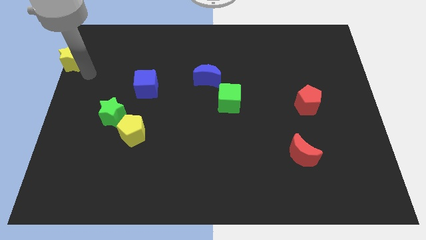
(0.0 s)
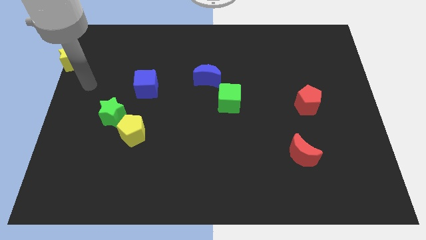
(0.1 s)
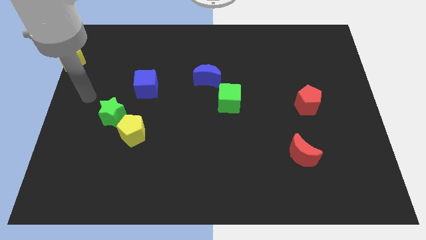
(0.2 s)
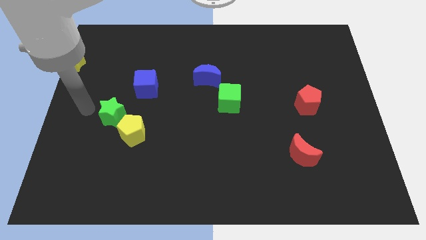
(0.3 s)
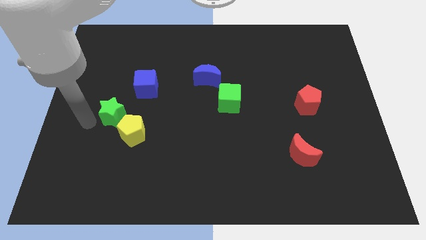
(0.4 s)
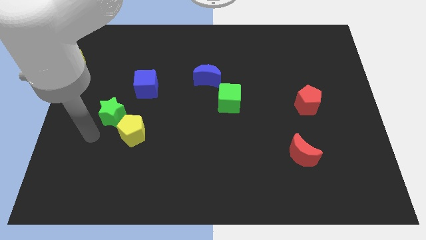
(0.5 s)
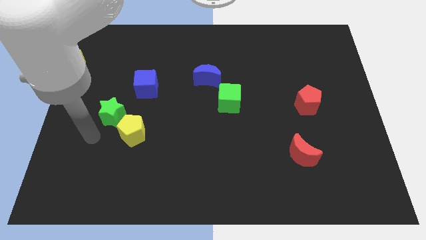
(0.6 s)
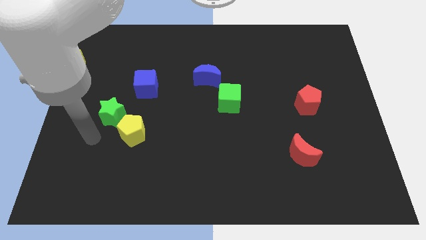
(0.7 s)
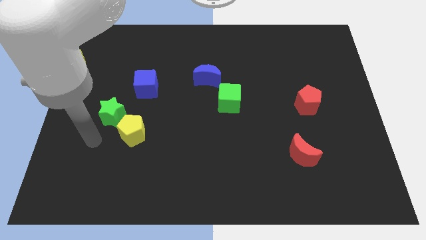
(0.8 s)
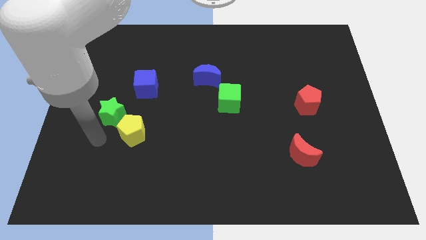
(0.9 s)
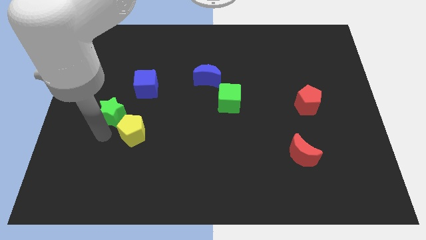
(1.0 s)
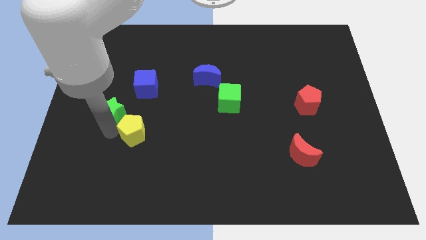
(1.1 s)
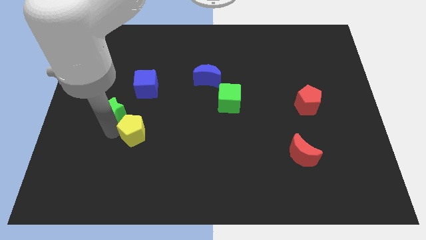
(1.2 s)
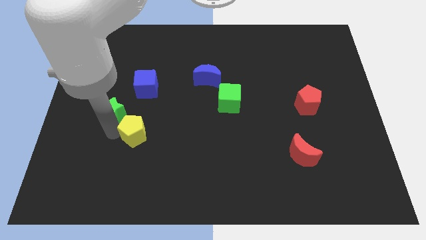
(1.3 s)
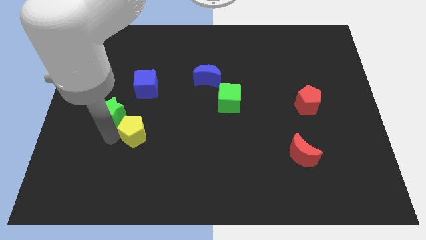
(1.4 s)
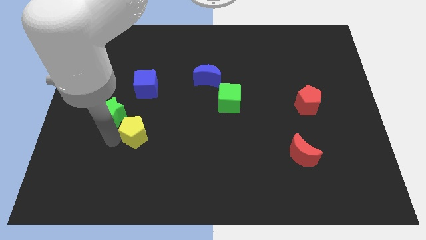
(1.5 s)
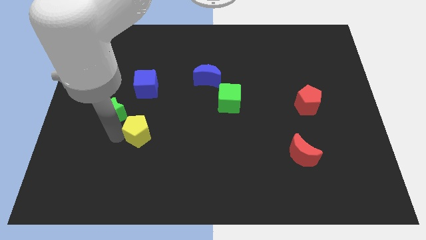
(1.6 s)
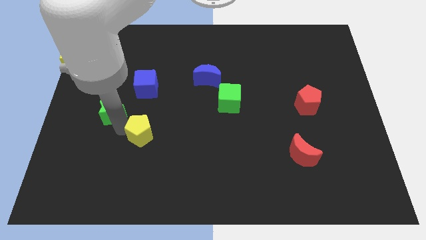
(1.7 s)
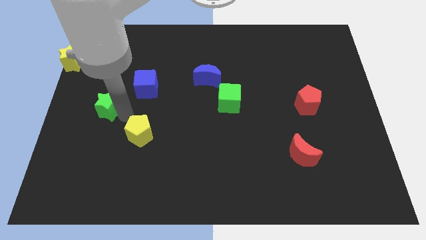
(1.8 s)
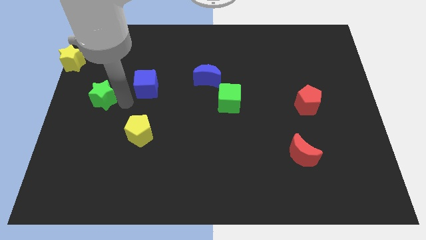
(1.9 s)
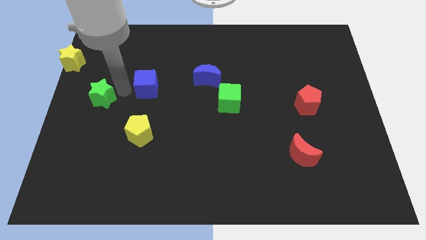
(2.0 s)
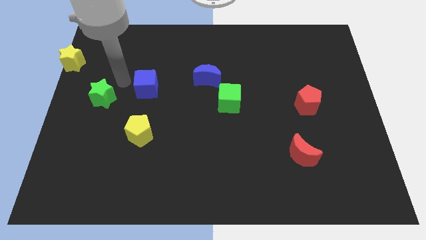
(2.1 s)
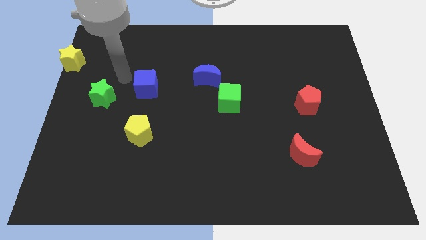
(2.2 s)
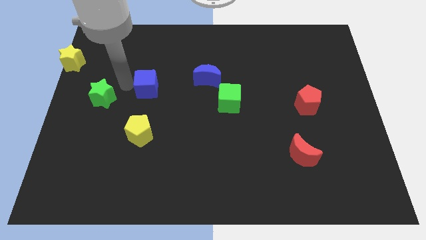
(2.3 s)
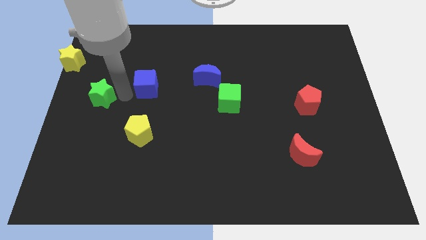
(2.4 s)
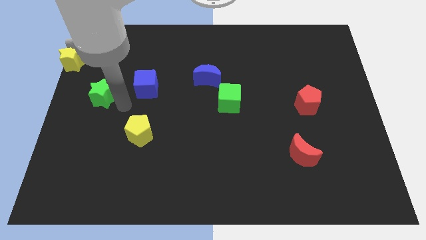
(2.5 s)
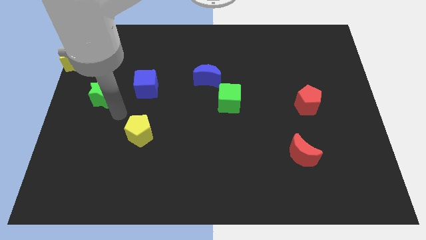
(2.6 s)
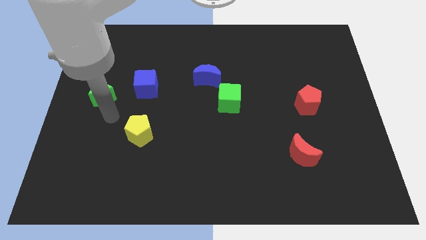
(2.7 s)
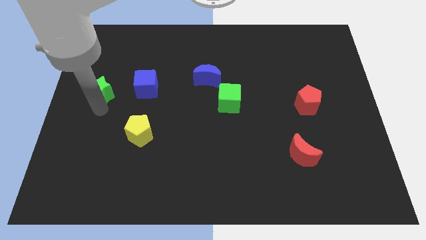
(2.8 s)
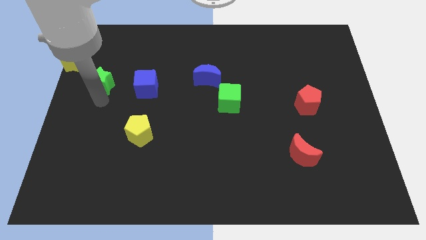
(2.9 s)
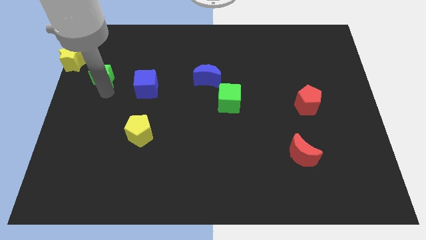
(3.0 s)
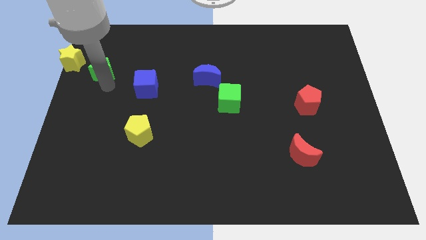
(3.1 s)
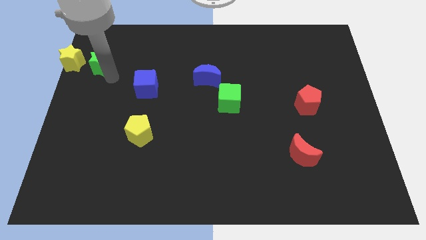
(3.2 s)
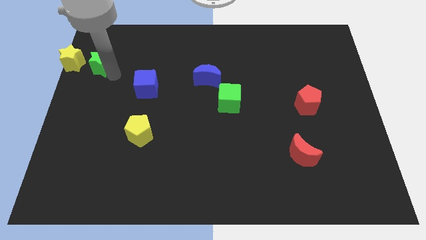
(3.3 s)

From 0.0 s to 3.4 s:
separate green star and the yellow pentagon

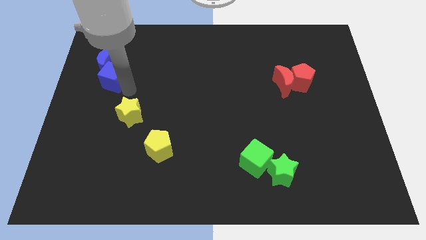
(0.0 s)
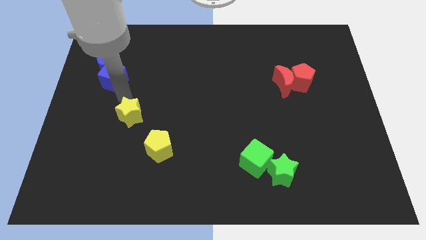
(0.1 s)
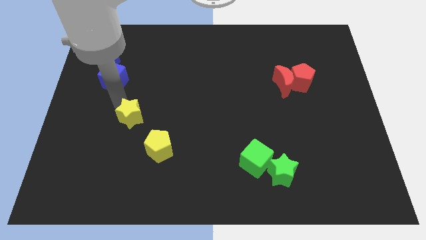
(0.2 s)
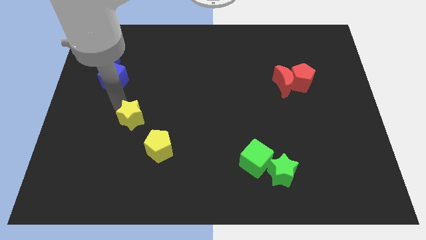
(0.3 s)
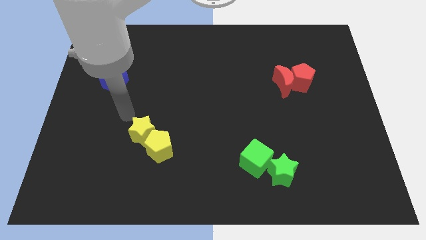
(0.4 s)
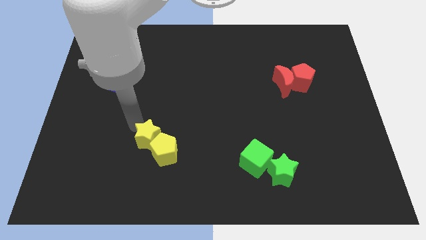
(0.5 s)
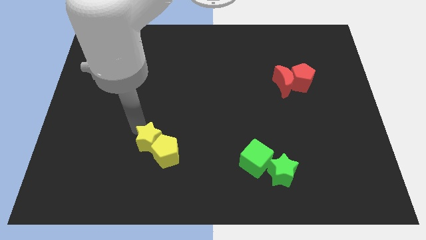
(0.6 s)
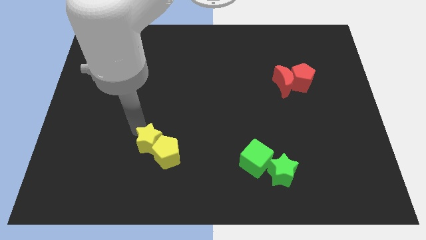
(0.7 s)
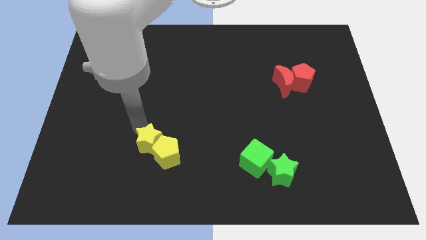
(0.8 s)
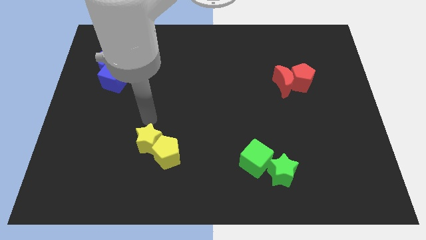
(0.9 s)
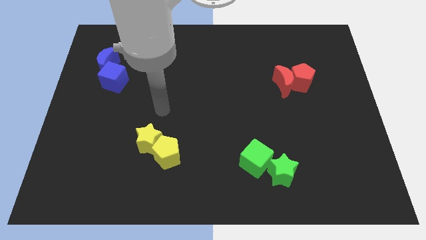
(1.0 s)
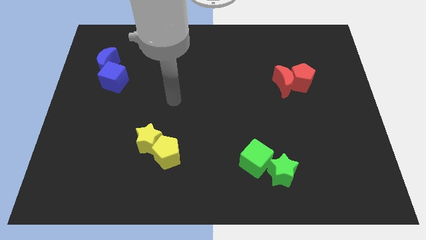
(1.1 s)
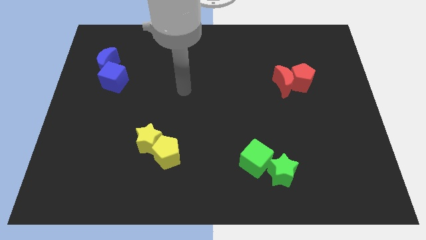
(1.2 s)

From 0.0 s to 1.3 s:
move the yellow star into the yellow pentagon

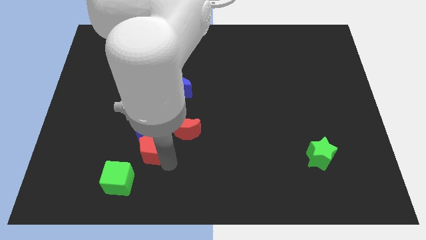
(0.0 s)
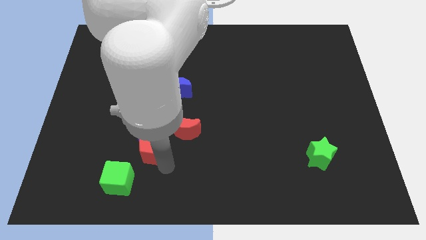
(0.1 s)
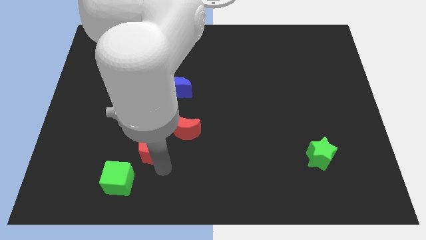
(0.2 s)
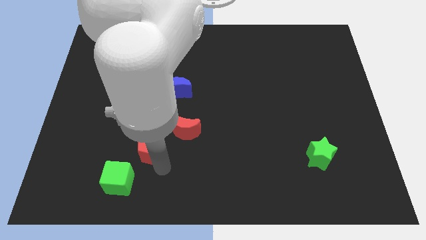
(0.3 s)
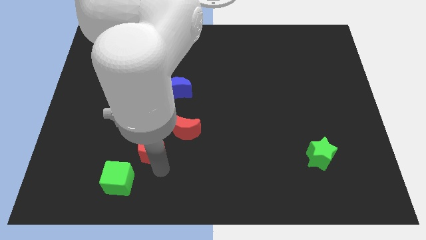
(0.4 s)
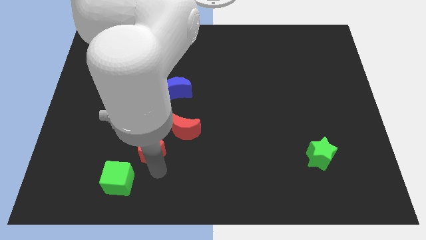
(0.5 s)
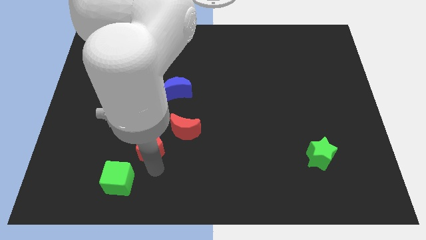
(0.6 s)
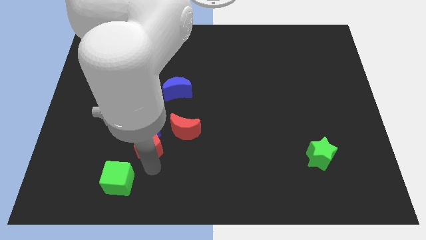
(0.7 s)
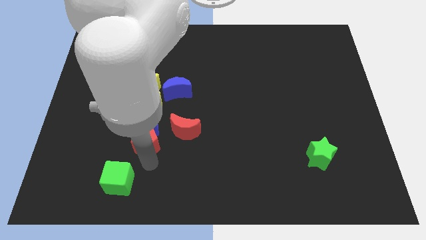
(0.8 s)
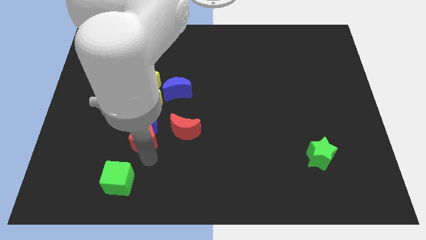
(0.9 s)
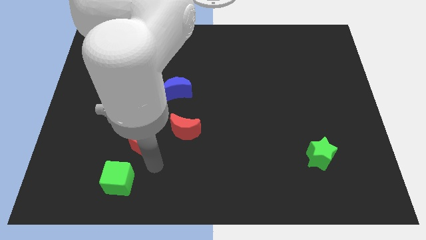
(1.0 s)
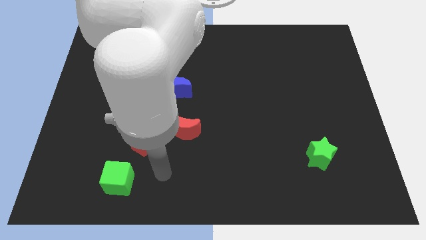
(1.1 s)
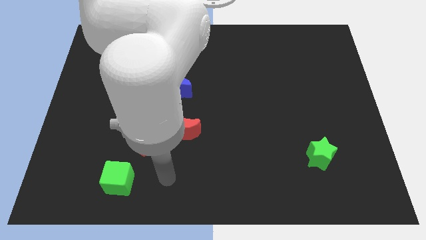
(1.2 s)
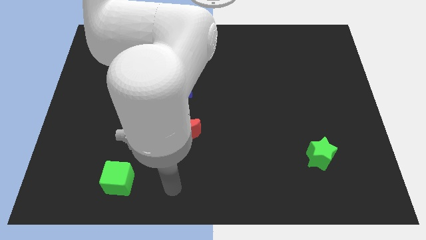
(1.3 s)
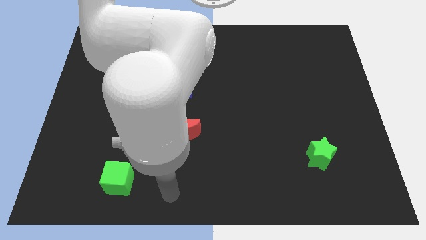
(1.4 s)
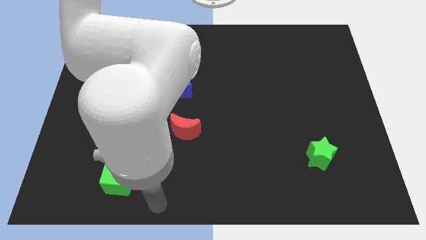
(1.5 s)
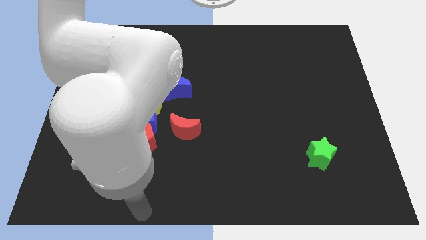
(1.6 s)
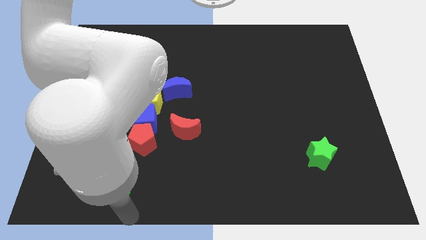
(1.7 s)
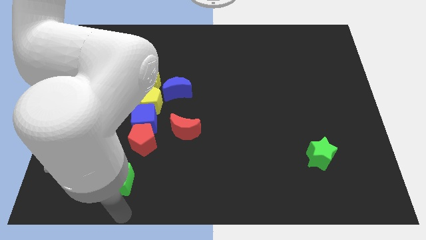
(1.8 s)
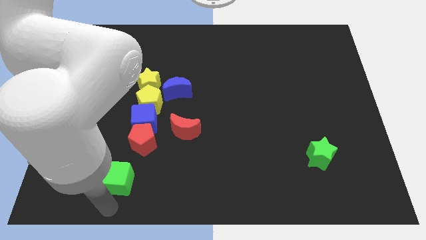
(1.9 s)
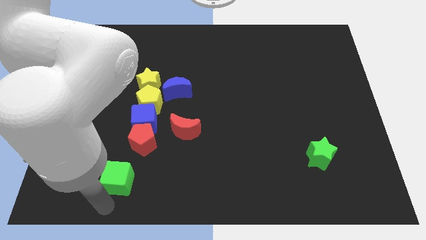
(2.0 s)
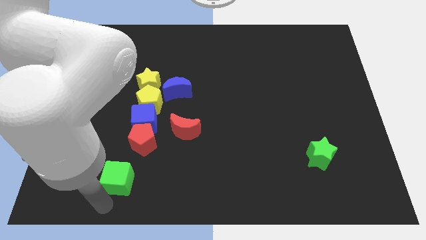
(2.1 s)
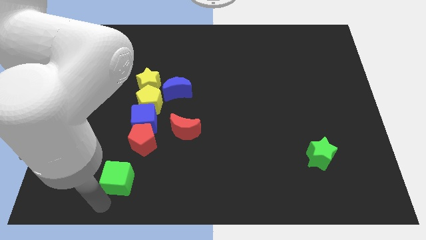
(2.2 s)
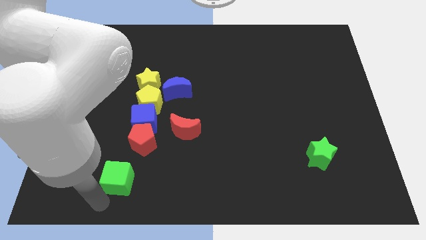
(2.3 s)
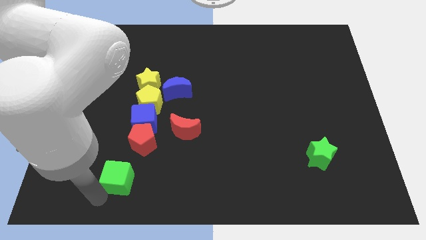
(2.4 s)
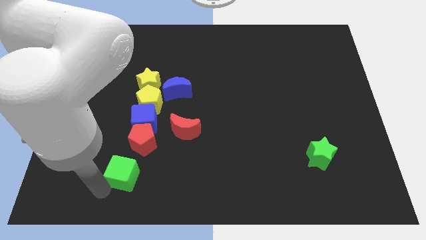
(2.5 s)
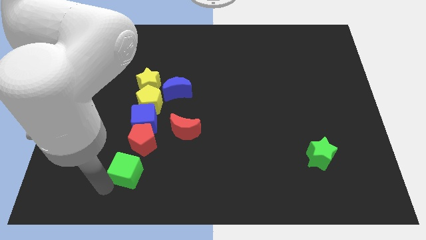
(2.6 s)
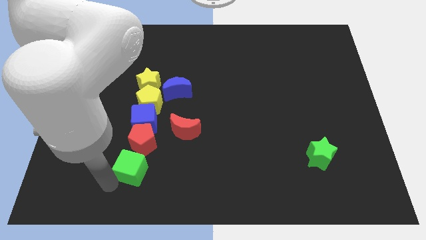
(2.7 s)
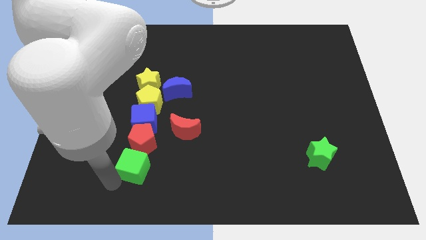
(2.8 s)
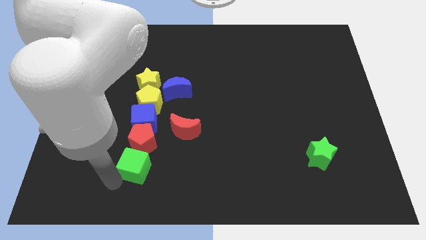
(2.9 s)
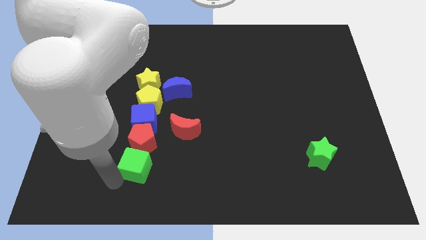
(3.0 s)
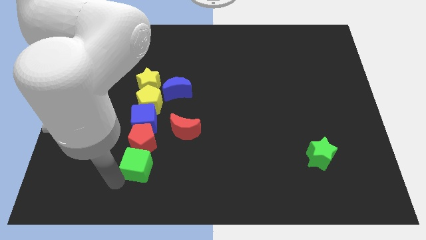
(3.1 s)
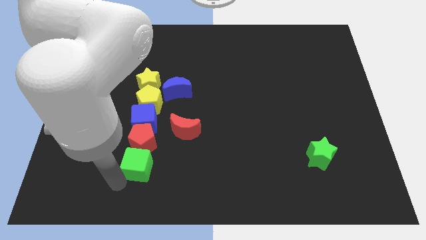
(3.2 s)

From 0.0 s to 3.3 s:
place the green cube towards the bottom of the red pentagon

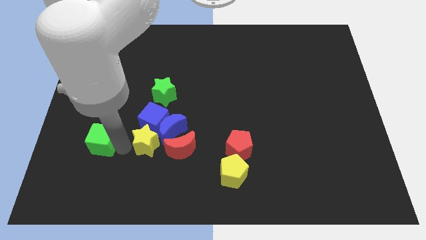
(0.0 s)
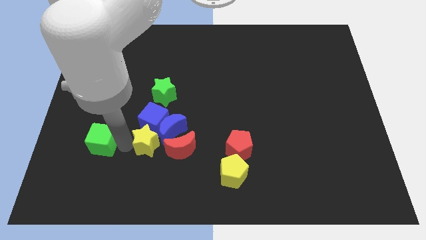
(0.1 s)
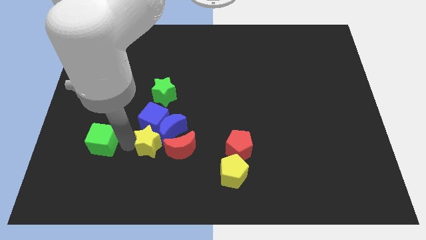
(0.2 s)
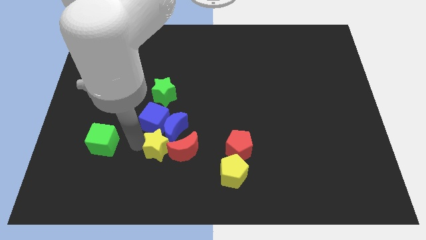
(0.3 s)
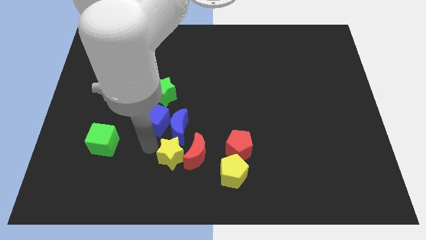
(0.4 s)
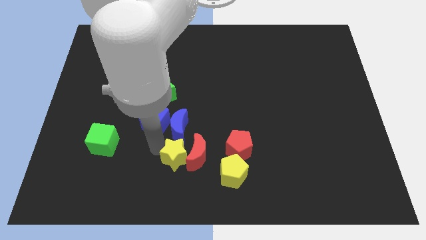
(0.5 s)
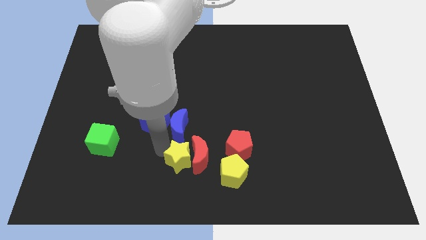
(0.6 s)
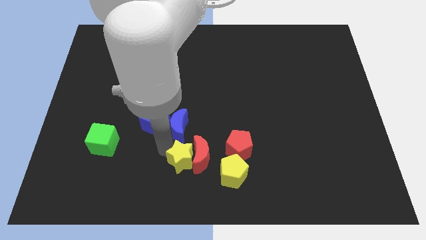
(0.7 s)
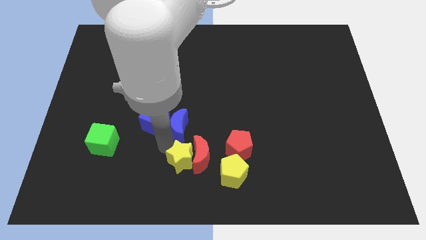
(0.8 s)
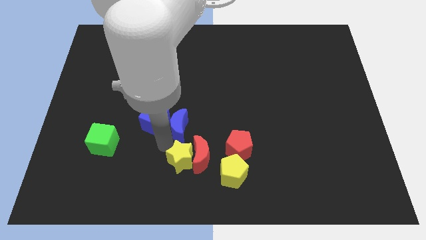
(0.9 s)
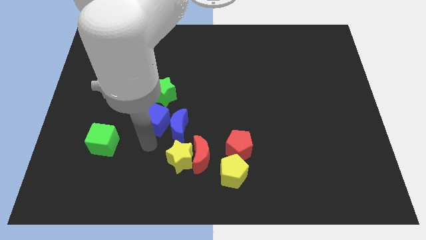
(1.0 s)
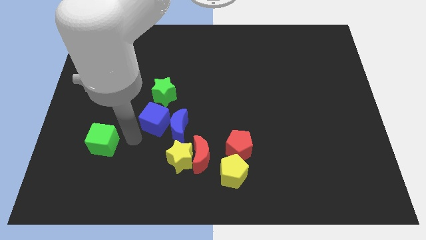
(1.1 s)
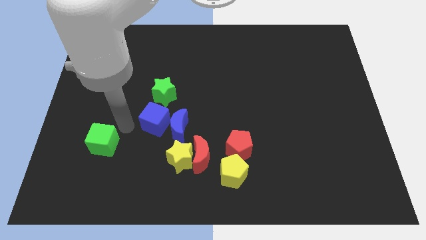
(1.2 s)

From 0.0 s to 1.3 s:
push the yellow star to the left side of the red crescent
